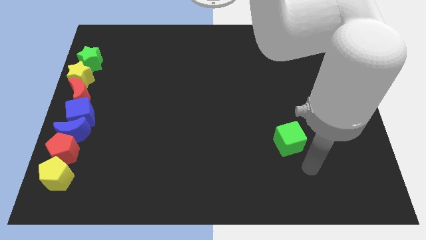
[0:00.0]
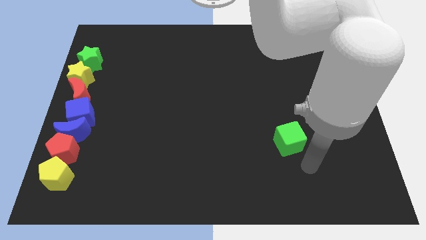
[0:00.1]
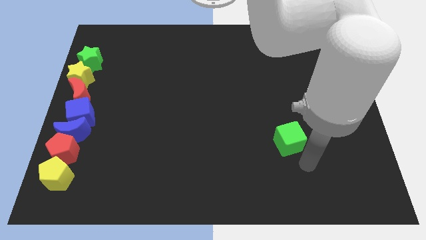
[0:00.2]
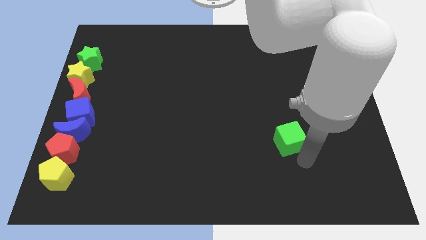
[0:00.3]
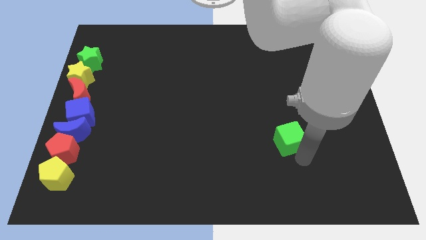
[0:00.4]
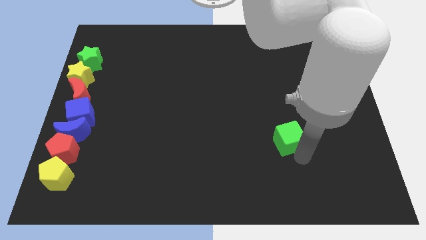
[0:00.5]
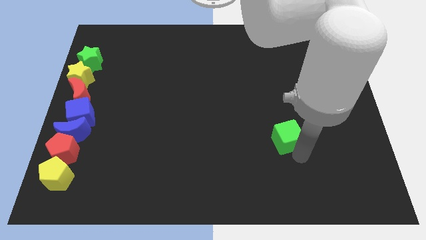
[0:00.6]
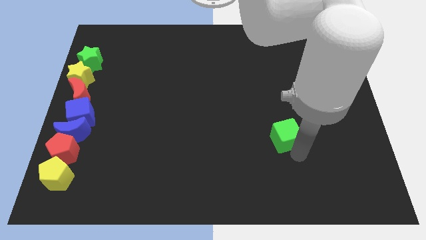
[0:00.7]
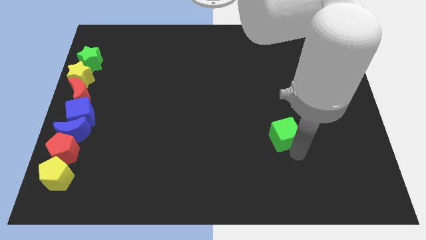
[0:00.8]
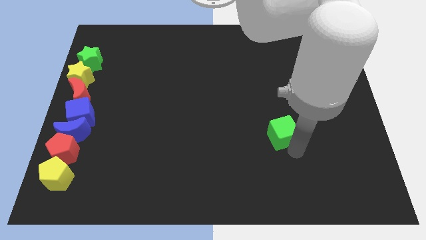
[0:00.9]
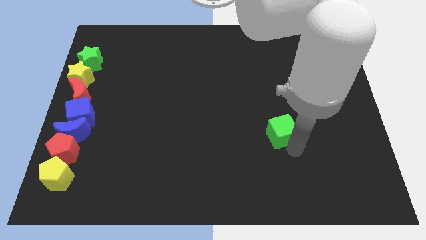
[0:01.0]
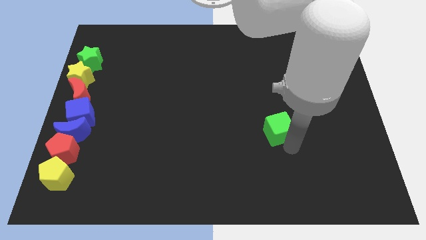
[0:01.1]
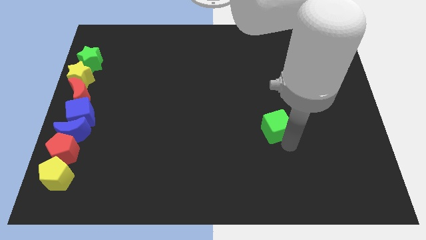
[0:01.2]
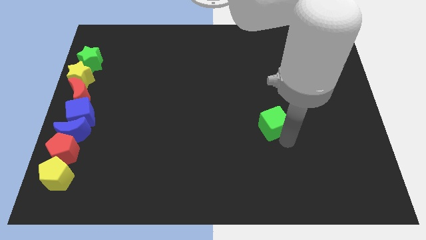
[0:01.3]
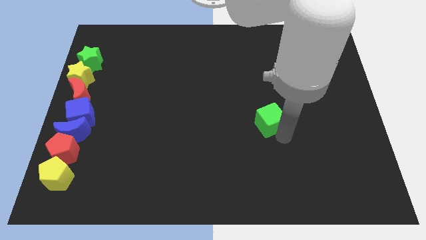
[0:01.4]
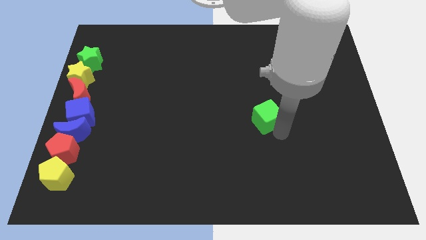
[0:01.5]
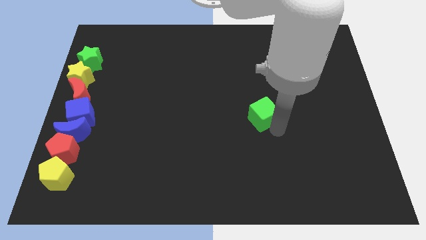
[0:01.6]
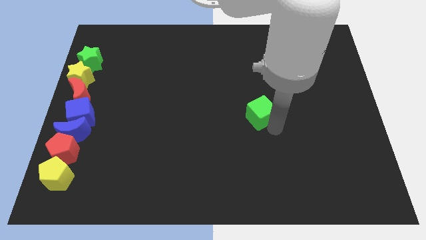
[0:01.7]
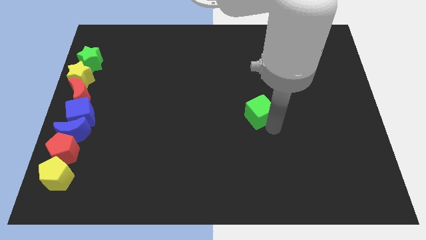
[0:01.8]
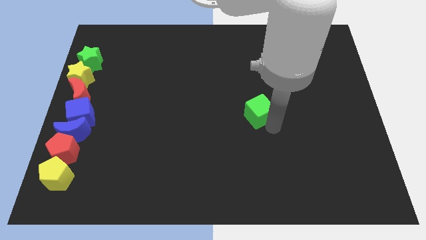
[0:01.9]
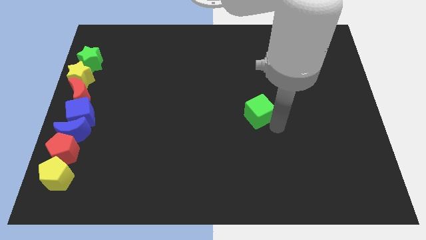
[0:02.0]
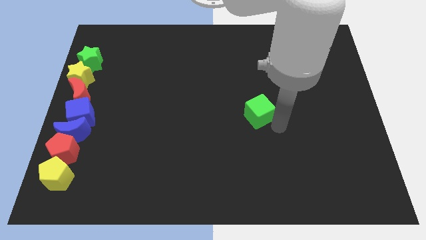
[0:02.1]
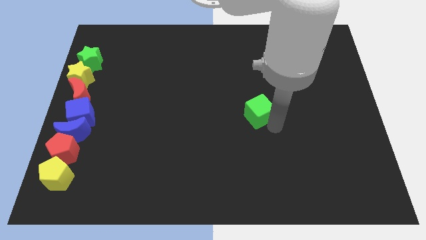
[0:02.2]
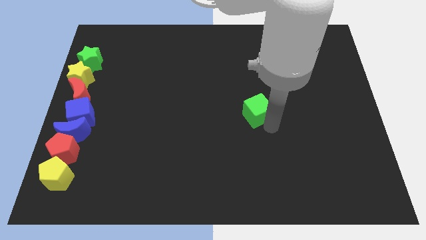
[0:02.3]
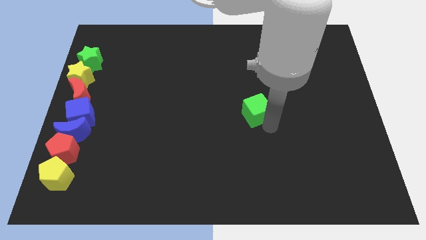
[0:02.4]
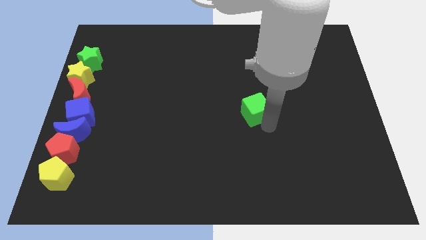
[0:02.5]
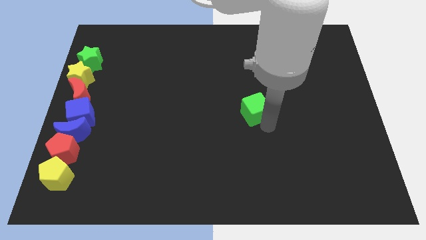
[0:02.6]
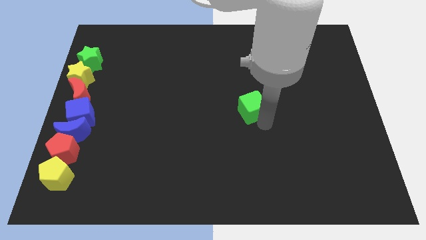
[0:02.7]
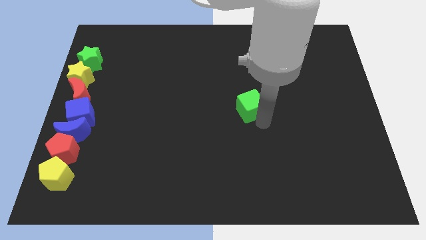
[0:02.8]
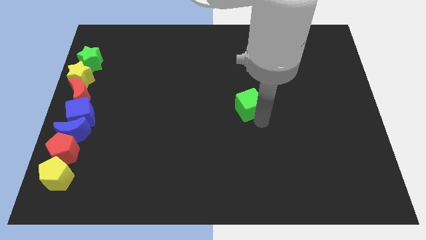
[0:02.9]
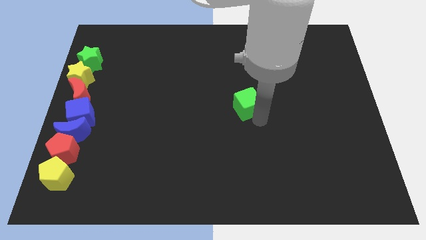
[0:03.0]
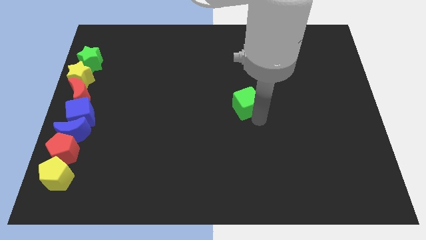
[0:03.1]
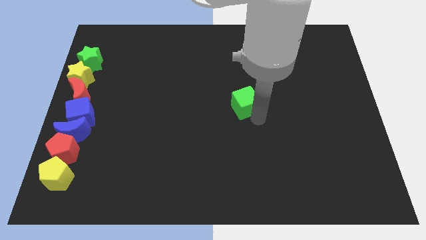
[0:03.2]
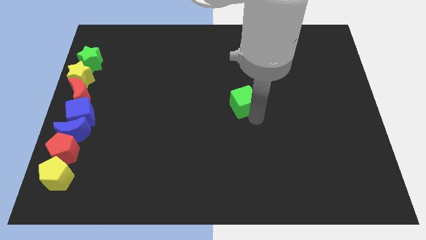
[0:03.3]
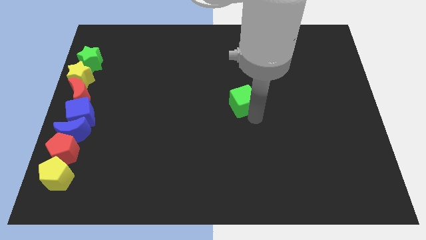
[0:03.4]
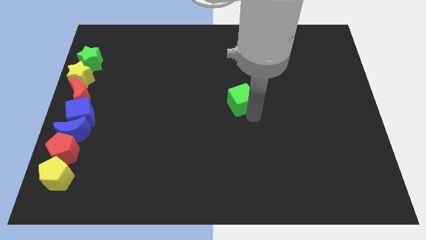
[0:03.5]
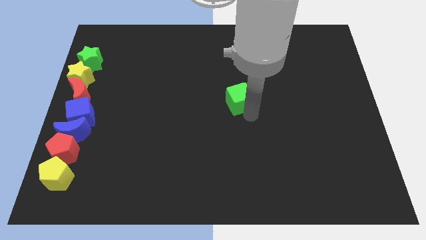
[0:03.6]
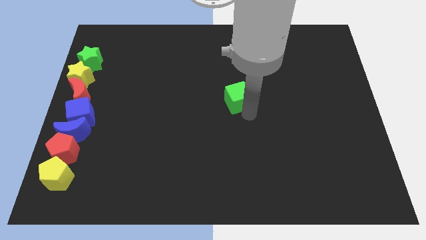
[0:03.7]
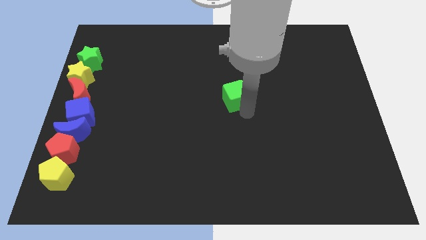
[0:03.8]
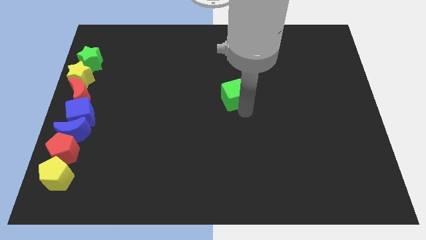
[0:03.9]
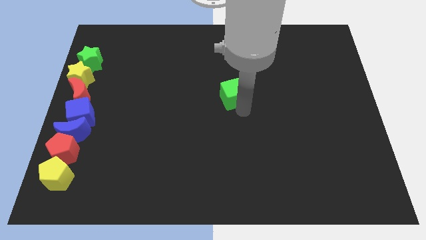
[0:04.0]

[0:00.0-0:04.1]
push the green cube to the center of the board

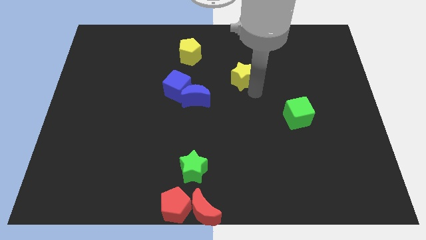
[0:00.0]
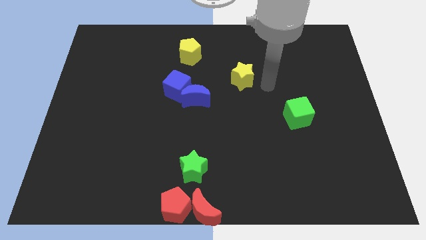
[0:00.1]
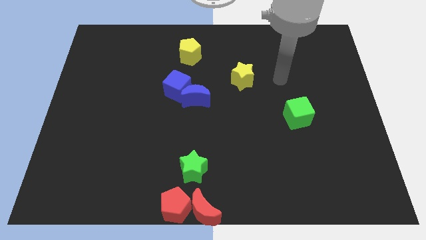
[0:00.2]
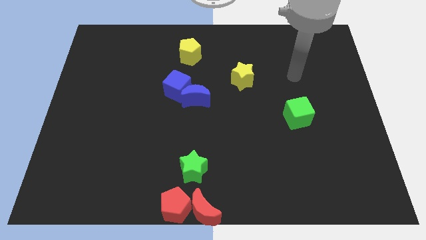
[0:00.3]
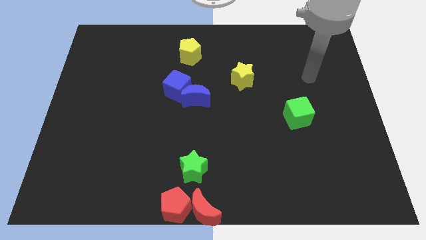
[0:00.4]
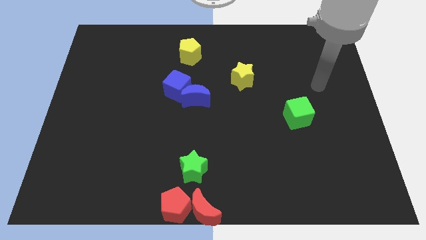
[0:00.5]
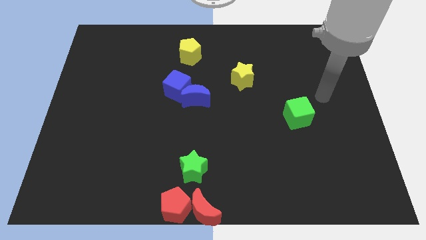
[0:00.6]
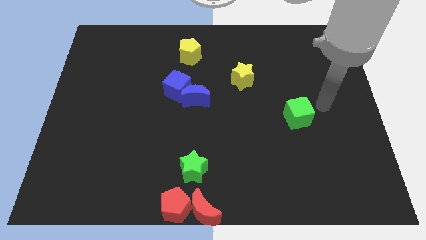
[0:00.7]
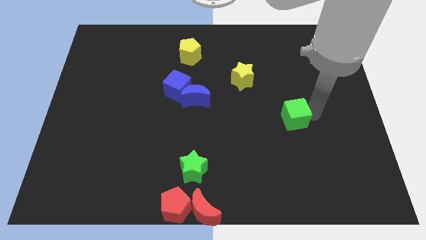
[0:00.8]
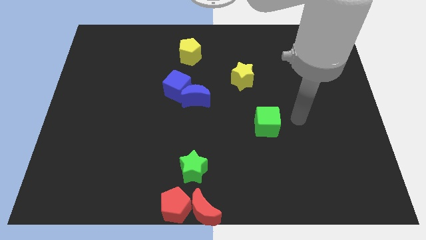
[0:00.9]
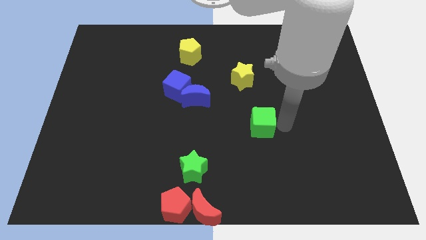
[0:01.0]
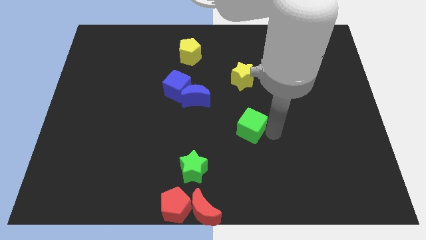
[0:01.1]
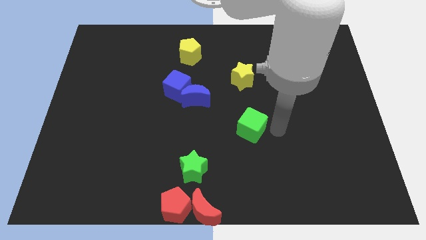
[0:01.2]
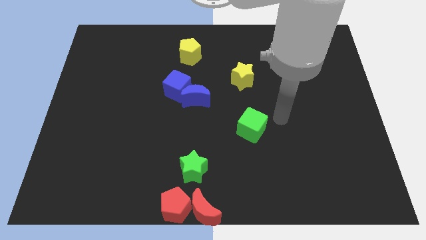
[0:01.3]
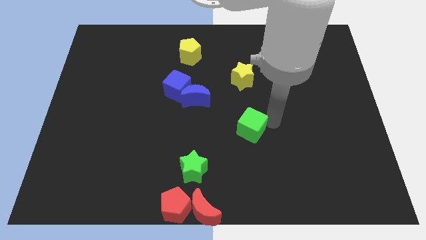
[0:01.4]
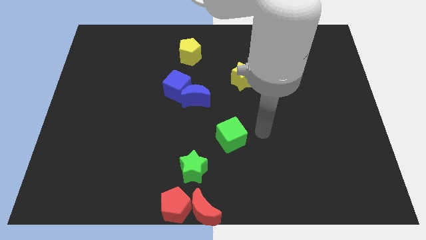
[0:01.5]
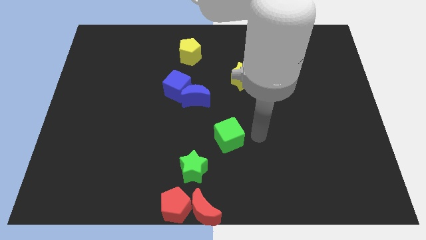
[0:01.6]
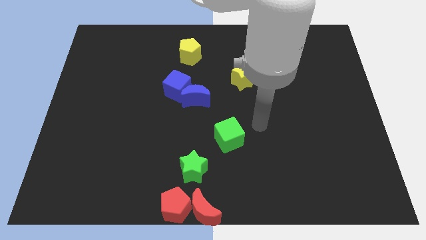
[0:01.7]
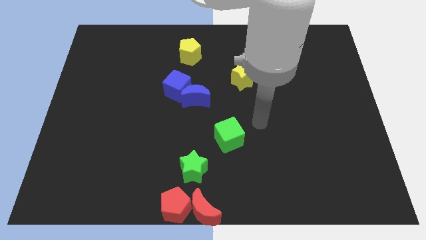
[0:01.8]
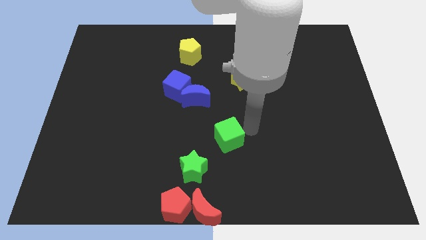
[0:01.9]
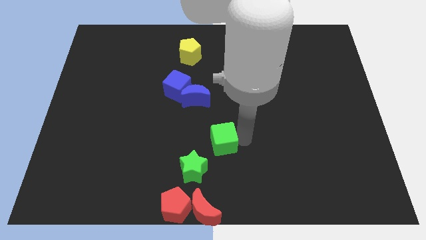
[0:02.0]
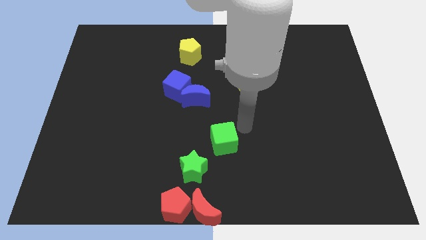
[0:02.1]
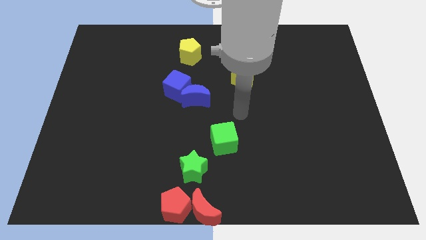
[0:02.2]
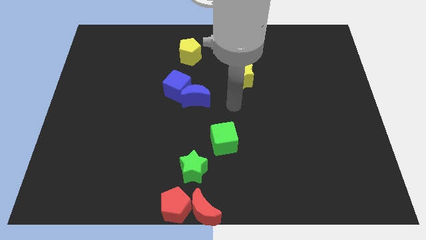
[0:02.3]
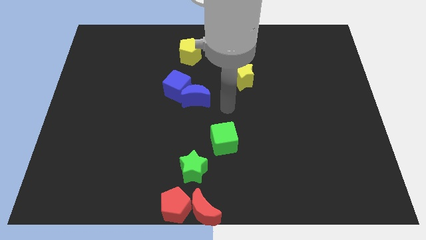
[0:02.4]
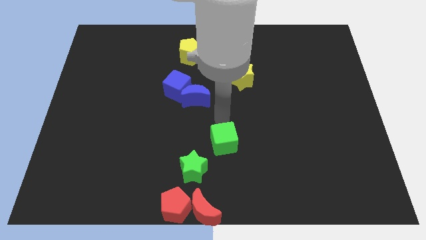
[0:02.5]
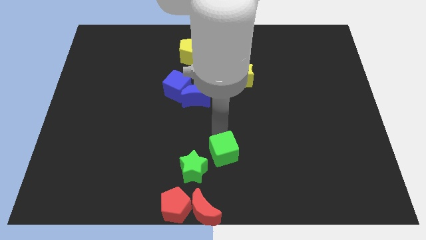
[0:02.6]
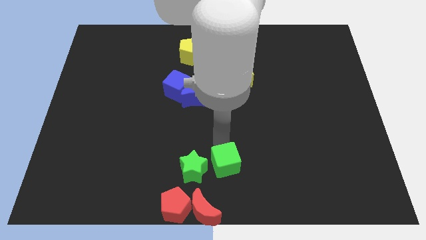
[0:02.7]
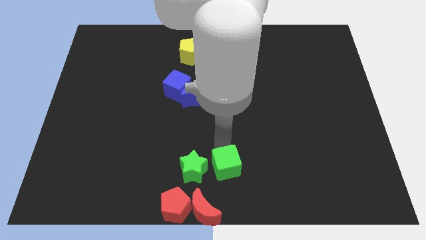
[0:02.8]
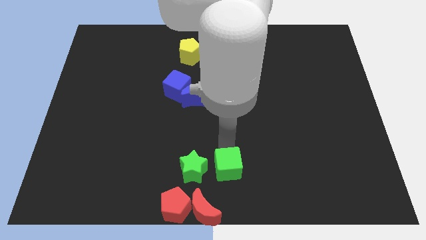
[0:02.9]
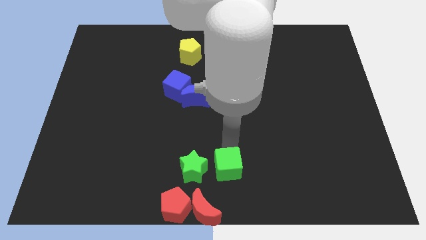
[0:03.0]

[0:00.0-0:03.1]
move the green cube to the right of green star

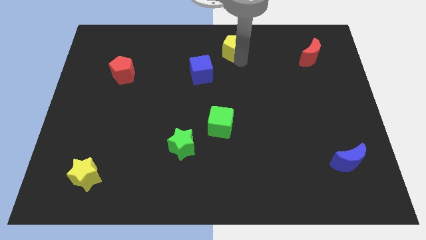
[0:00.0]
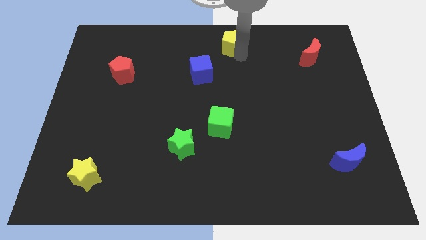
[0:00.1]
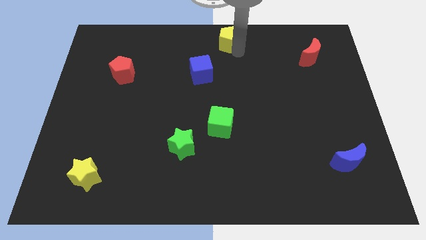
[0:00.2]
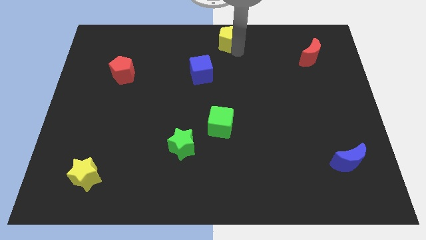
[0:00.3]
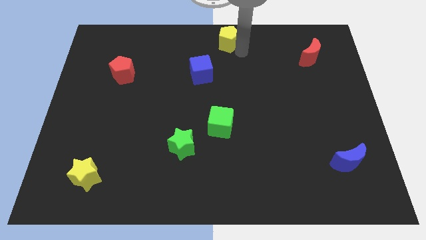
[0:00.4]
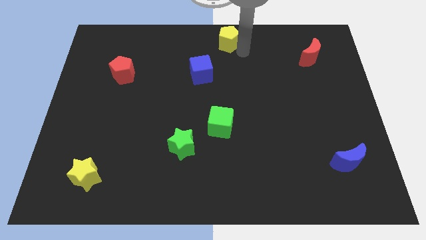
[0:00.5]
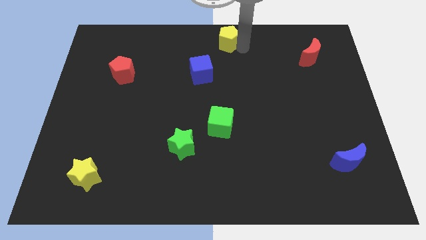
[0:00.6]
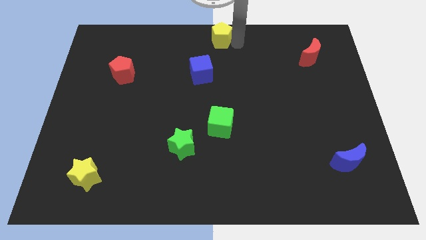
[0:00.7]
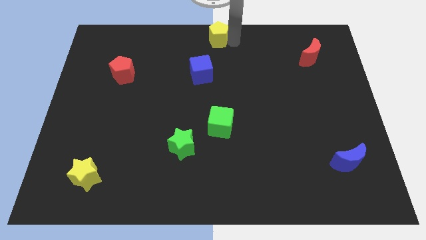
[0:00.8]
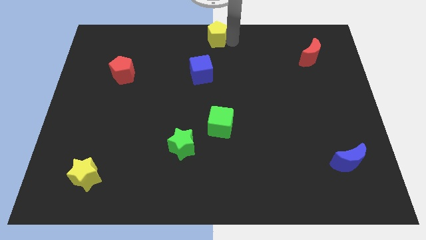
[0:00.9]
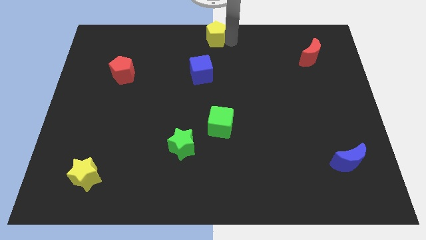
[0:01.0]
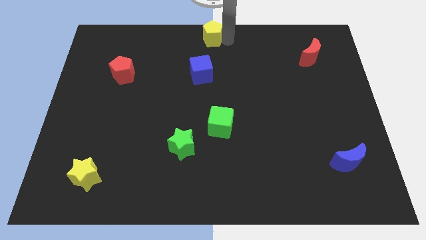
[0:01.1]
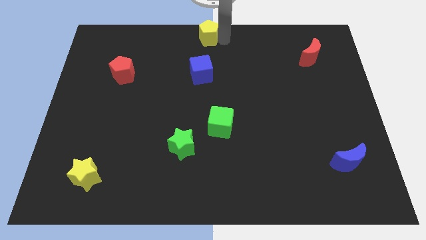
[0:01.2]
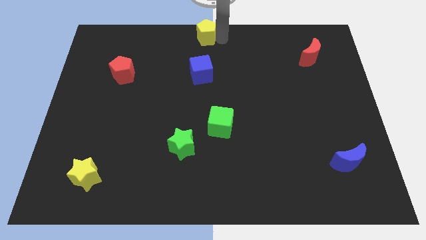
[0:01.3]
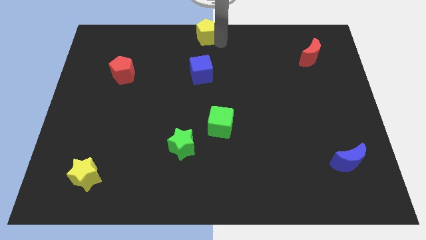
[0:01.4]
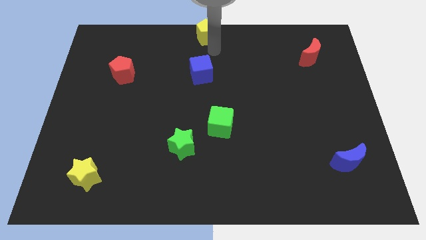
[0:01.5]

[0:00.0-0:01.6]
move yellow pentagon to the top of the blue cube
